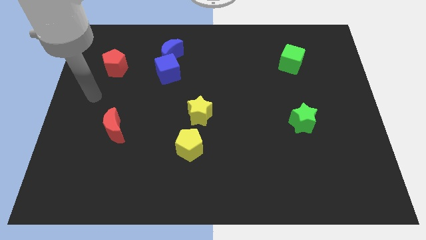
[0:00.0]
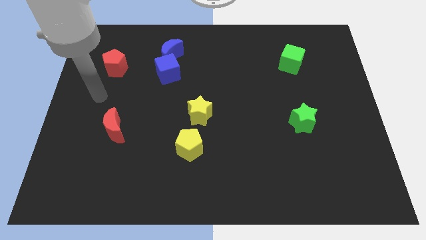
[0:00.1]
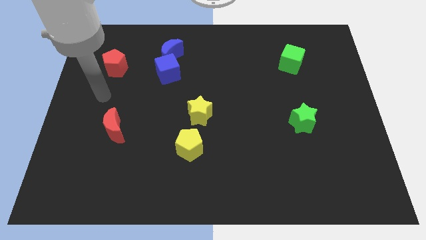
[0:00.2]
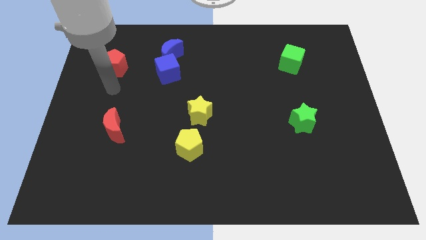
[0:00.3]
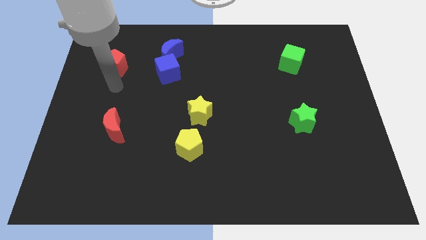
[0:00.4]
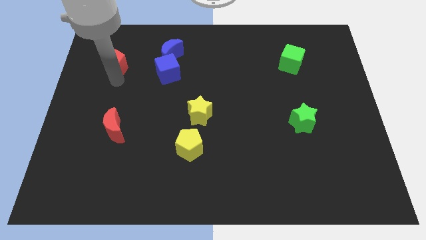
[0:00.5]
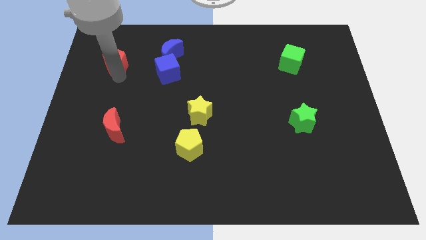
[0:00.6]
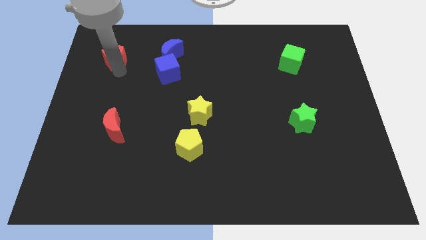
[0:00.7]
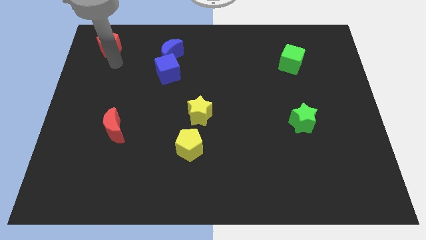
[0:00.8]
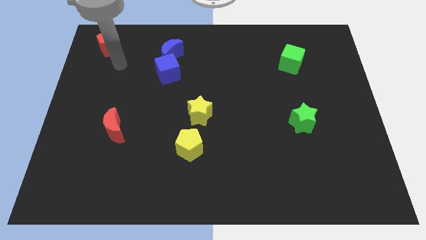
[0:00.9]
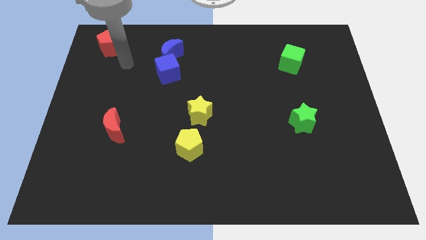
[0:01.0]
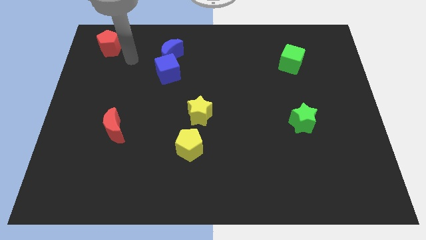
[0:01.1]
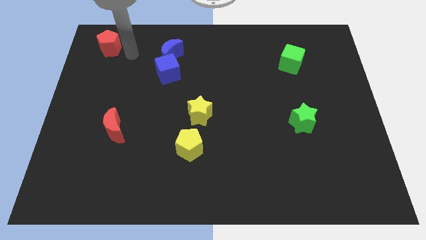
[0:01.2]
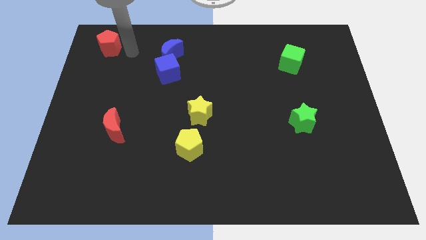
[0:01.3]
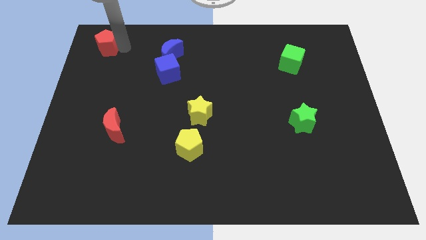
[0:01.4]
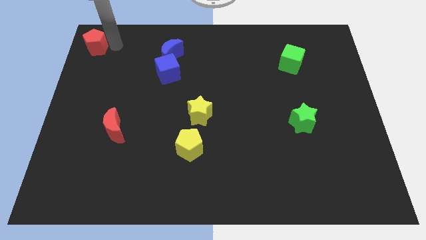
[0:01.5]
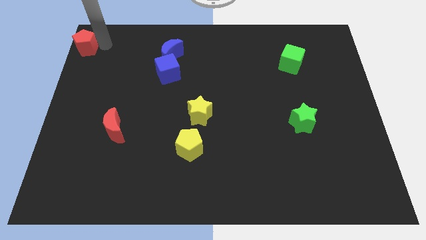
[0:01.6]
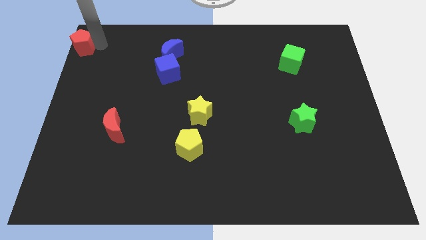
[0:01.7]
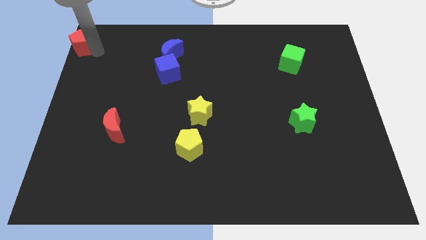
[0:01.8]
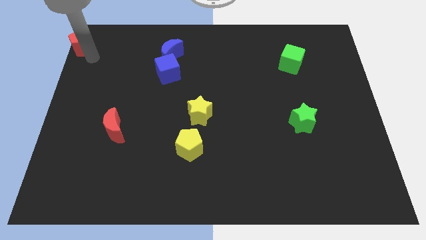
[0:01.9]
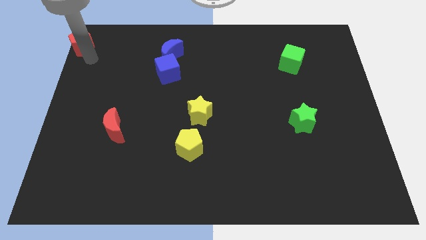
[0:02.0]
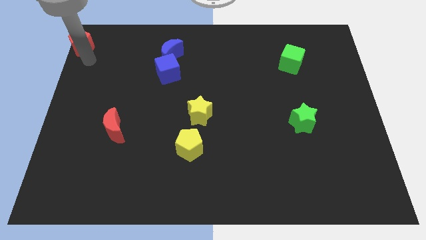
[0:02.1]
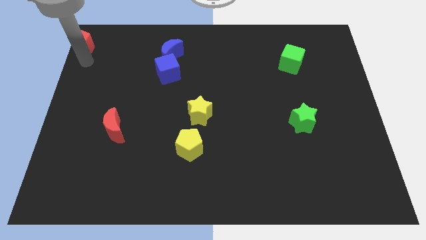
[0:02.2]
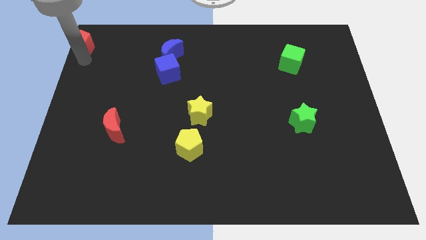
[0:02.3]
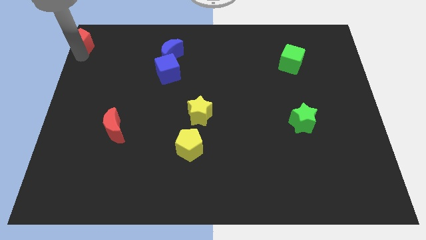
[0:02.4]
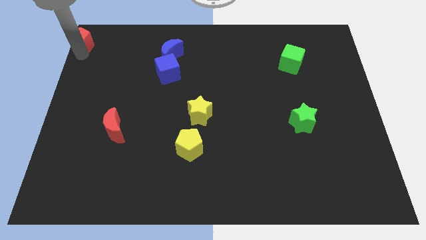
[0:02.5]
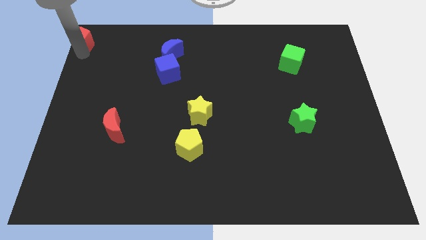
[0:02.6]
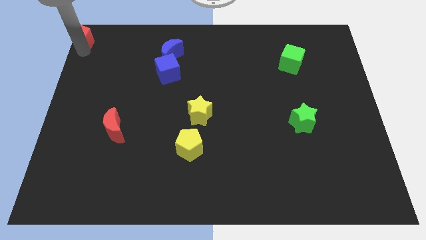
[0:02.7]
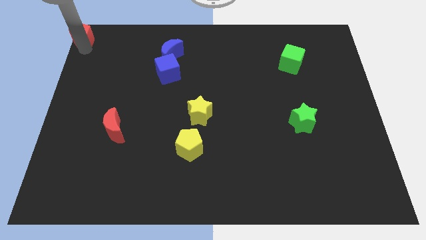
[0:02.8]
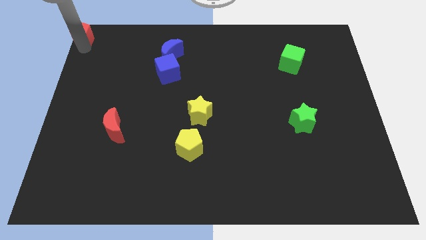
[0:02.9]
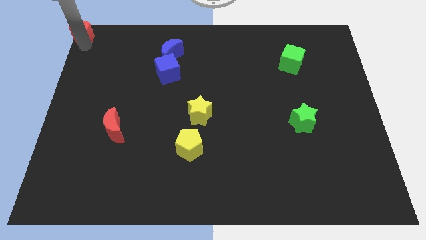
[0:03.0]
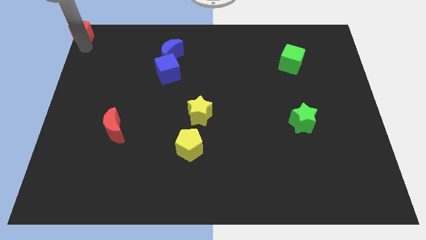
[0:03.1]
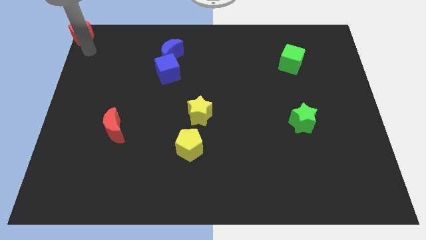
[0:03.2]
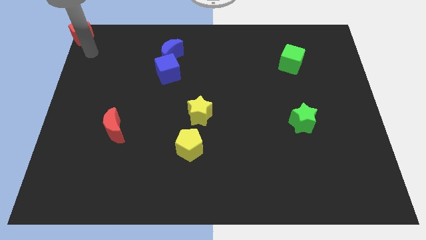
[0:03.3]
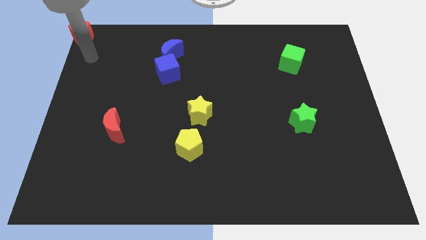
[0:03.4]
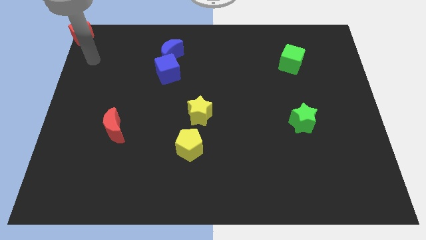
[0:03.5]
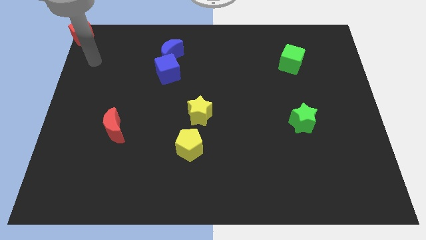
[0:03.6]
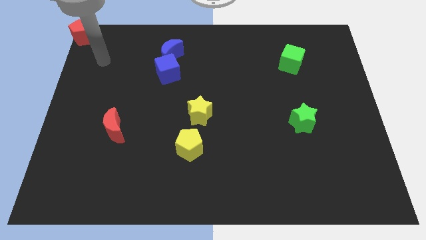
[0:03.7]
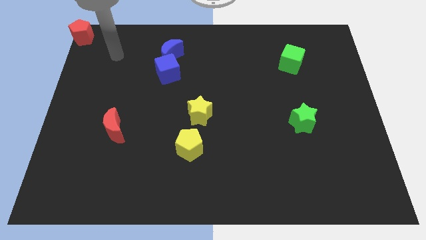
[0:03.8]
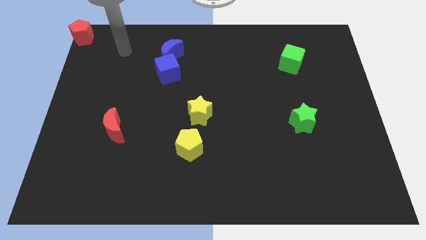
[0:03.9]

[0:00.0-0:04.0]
push the red pentagon to the top left corner of the board

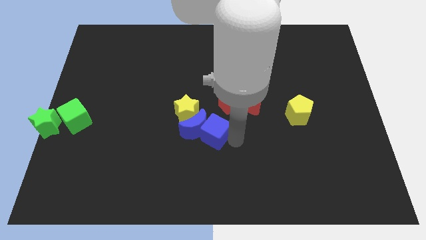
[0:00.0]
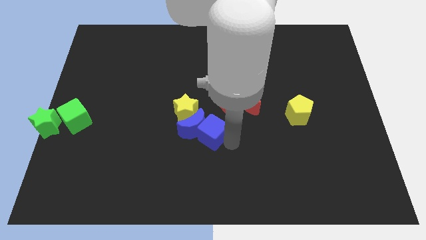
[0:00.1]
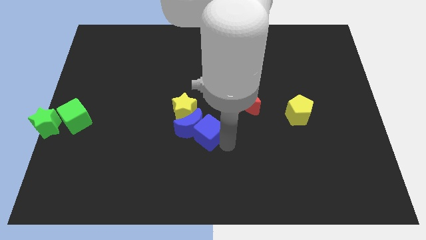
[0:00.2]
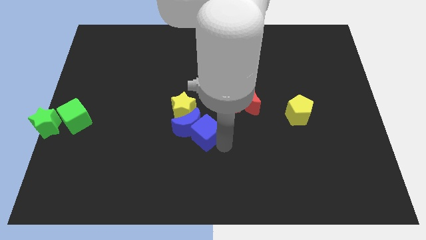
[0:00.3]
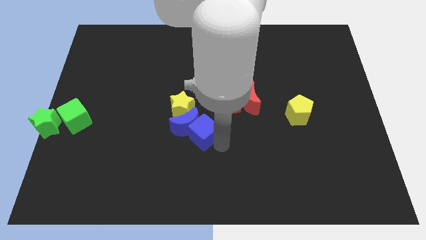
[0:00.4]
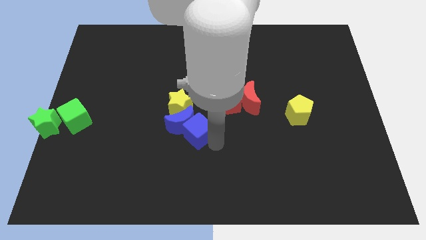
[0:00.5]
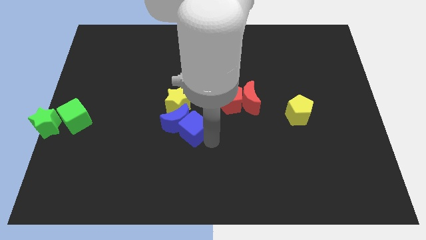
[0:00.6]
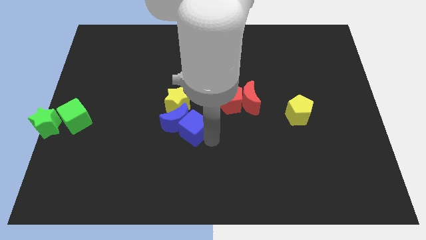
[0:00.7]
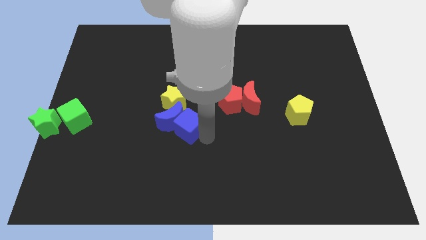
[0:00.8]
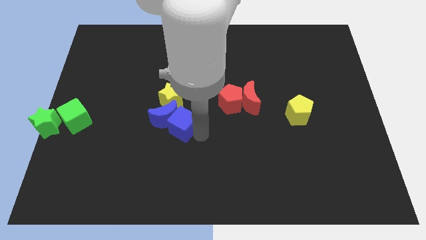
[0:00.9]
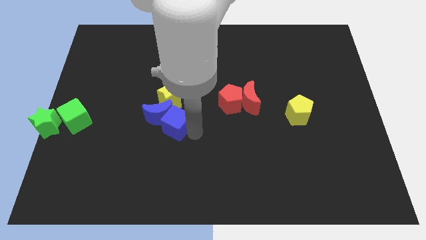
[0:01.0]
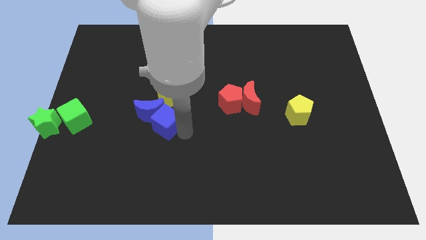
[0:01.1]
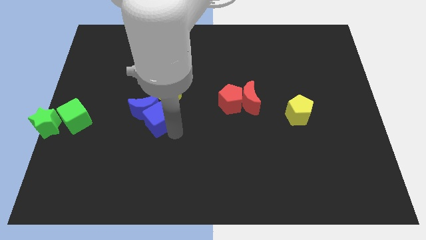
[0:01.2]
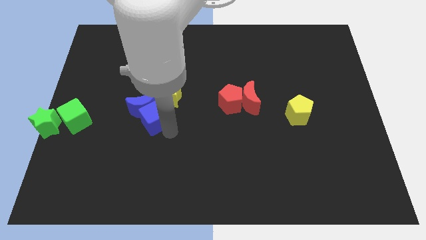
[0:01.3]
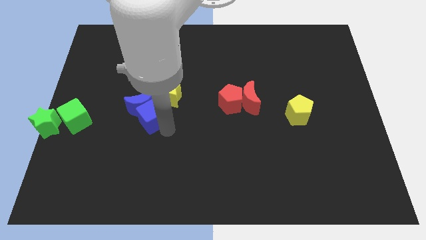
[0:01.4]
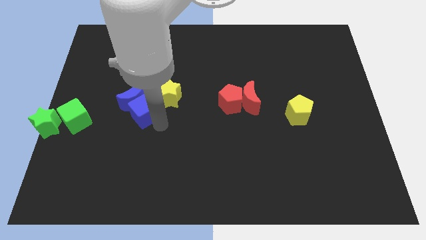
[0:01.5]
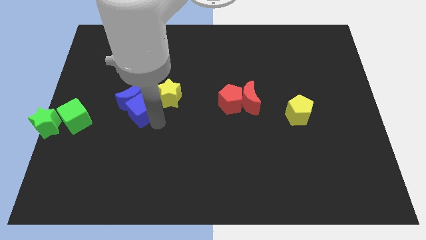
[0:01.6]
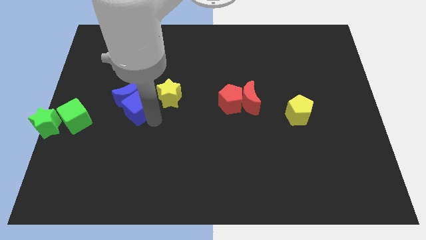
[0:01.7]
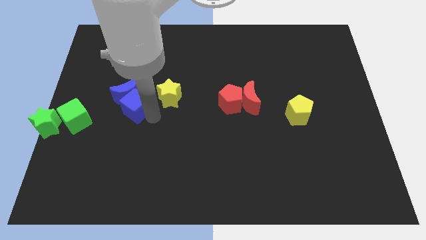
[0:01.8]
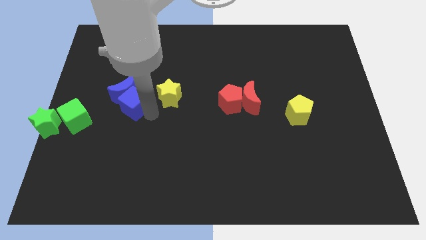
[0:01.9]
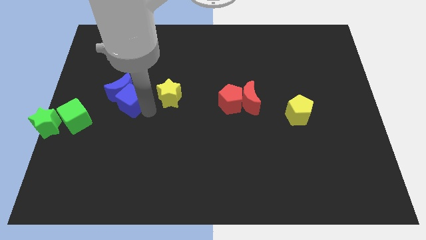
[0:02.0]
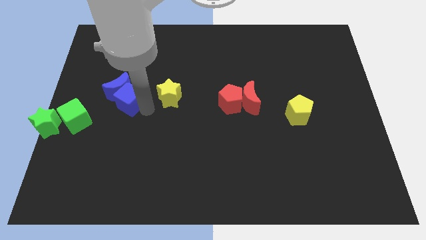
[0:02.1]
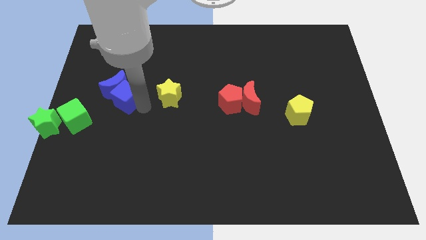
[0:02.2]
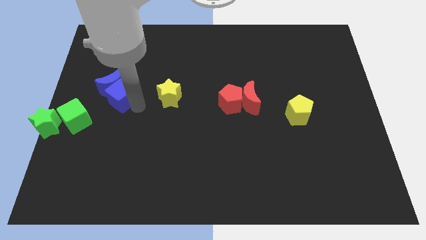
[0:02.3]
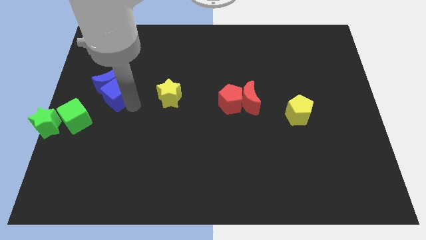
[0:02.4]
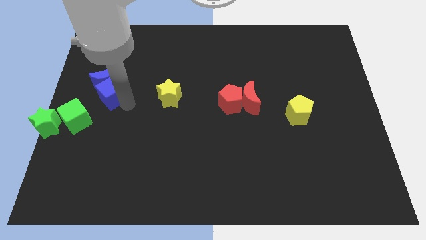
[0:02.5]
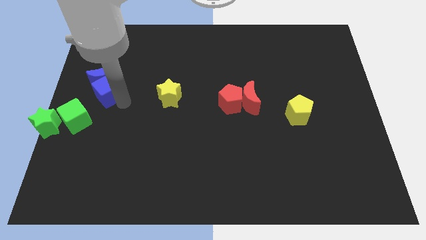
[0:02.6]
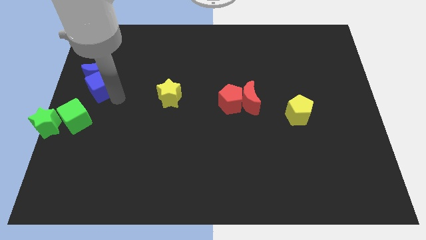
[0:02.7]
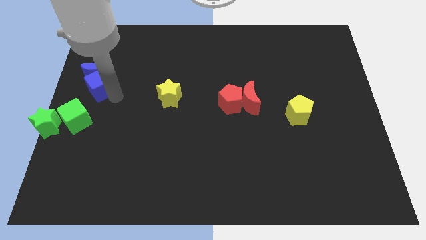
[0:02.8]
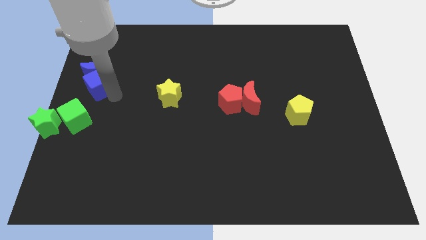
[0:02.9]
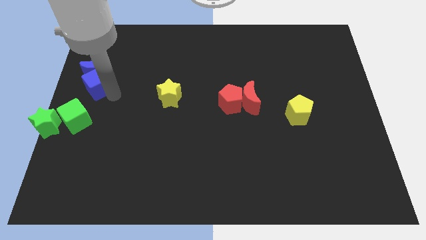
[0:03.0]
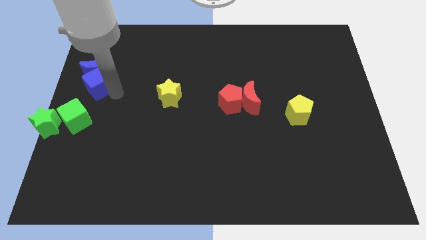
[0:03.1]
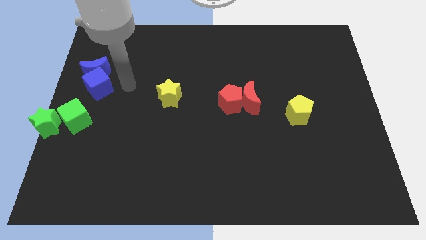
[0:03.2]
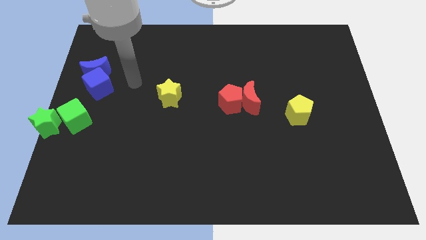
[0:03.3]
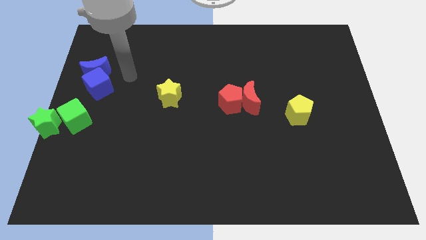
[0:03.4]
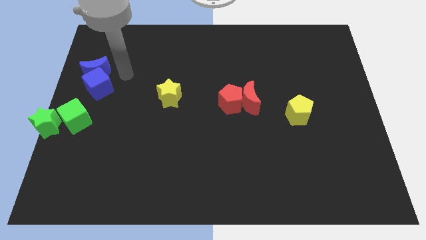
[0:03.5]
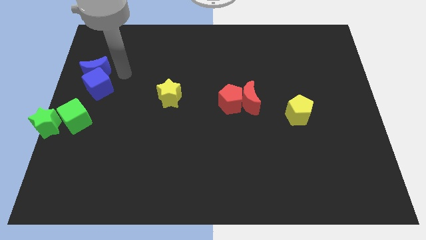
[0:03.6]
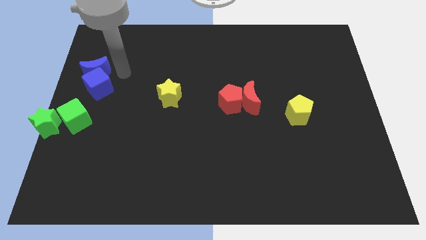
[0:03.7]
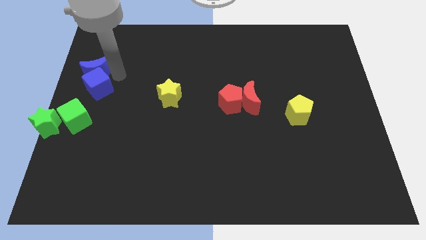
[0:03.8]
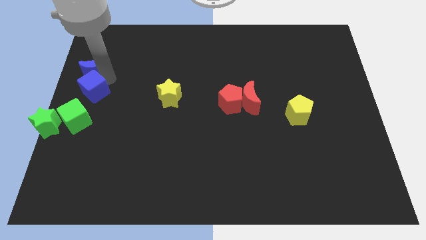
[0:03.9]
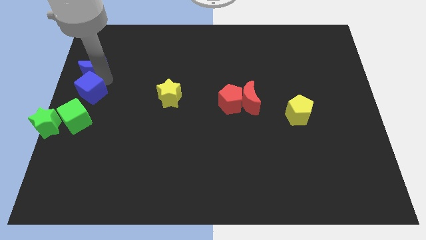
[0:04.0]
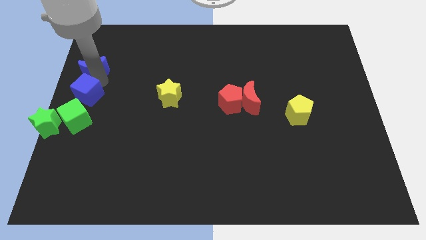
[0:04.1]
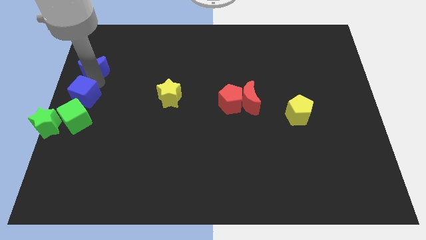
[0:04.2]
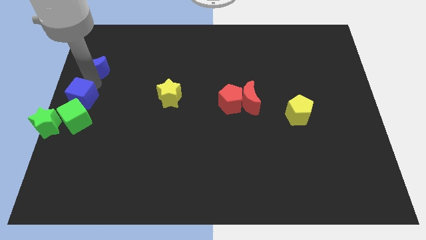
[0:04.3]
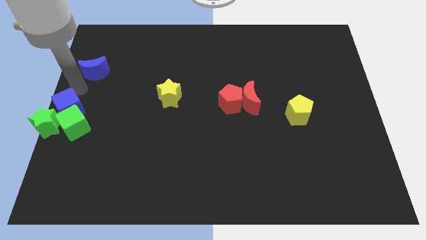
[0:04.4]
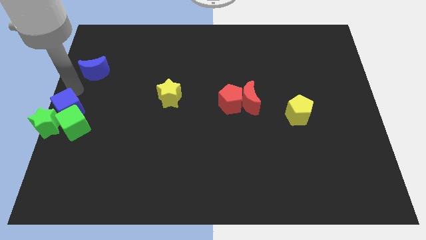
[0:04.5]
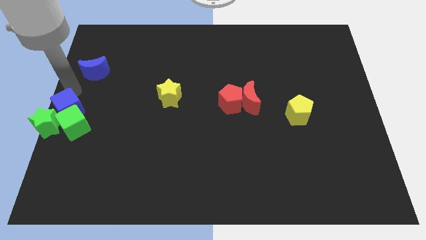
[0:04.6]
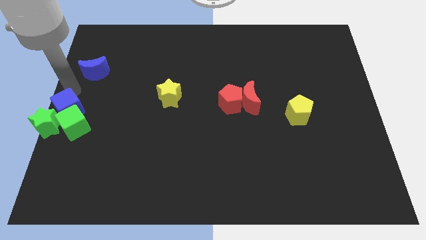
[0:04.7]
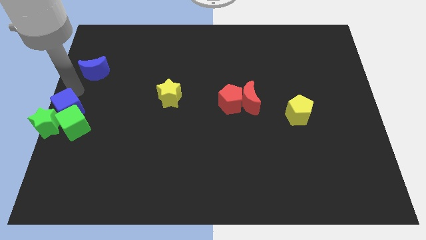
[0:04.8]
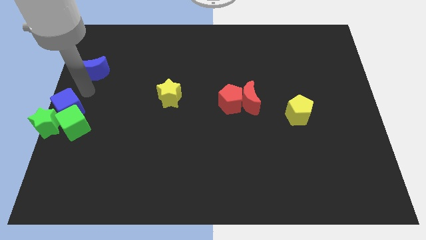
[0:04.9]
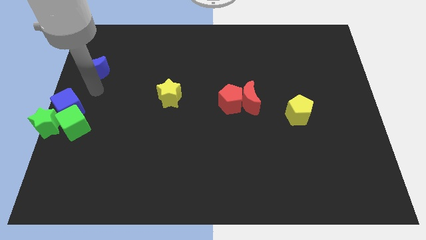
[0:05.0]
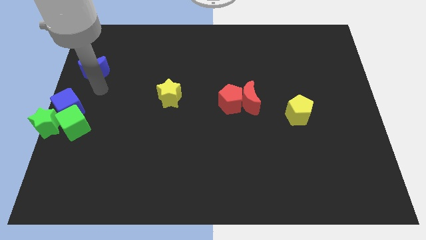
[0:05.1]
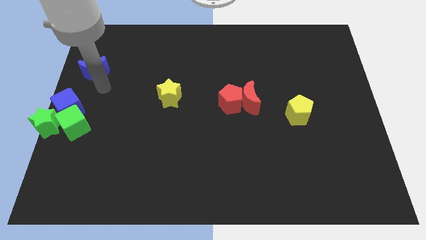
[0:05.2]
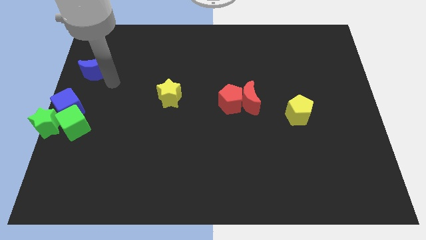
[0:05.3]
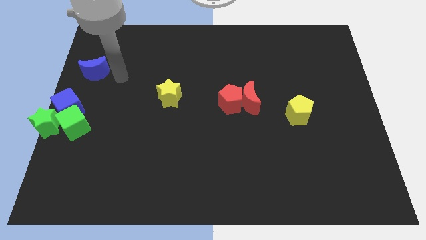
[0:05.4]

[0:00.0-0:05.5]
slide the blue cube into the green blocks
